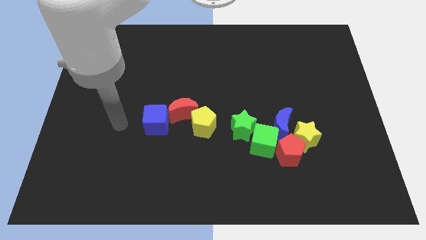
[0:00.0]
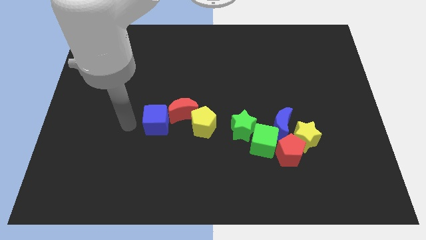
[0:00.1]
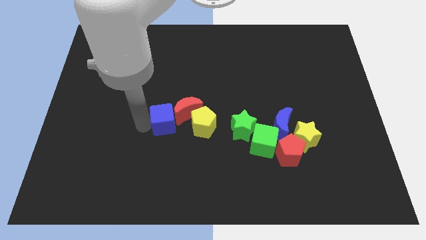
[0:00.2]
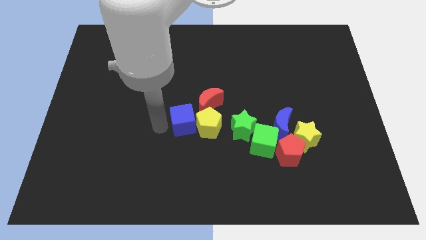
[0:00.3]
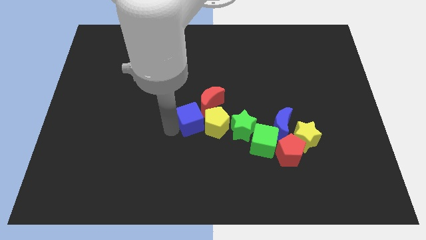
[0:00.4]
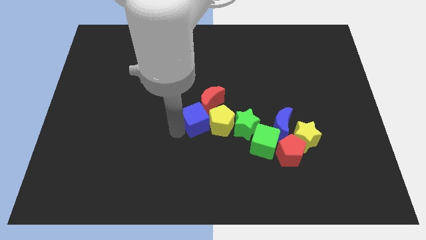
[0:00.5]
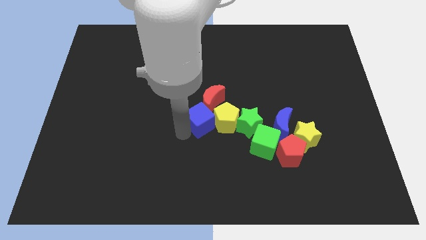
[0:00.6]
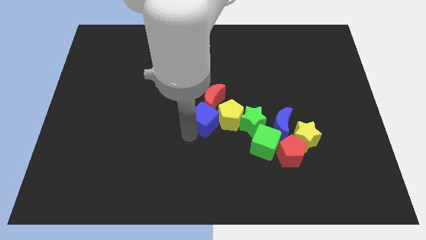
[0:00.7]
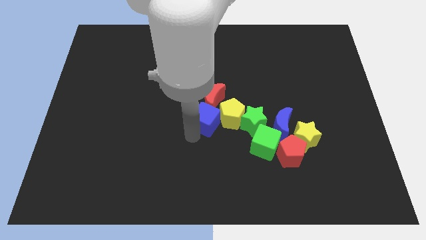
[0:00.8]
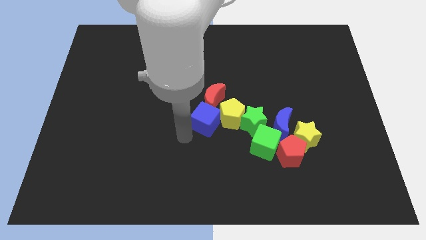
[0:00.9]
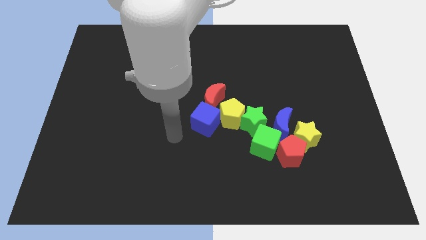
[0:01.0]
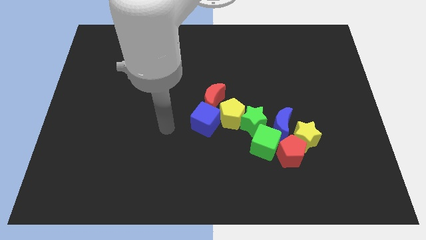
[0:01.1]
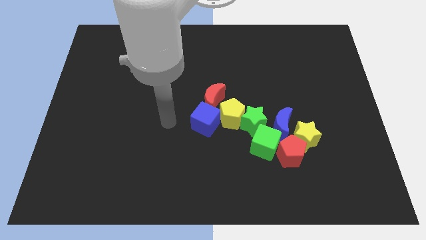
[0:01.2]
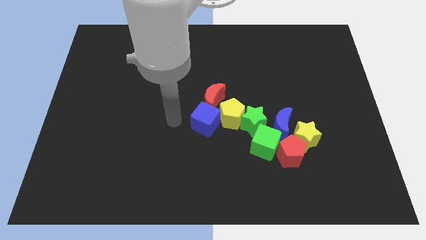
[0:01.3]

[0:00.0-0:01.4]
slide the blue cube into the yellow pentagon

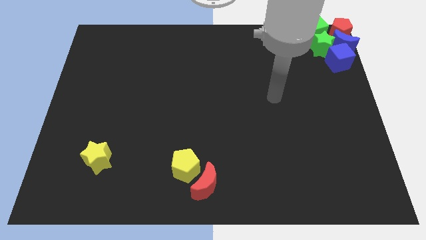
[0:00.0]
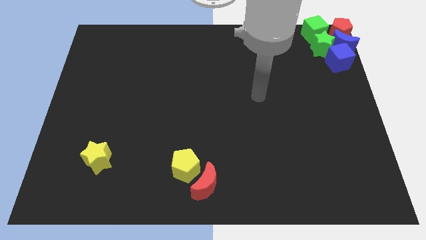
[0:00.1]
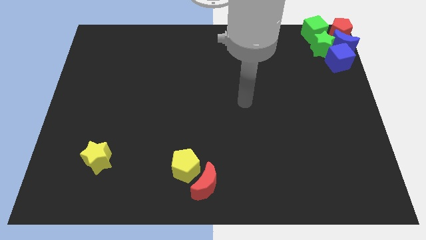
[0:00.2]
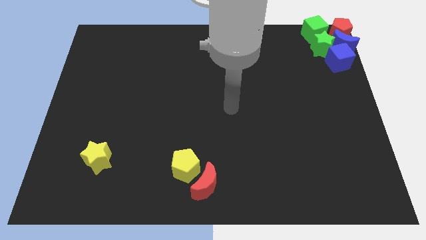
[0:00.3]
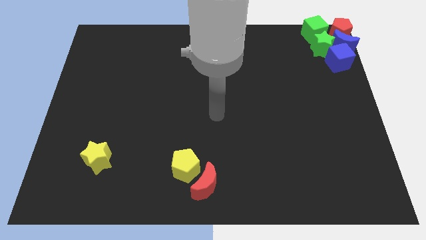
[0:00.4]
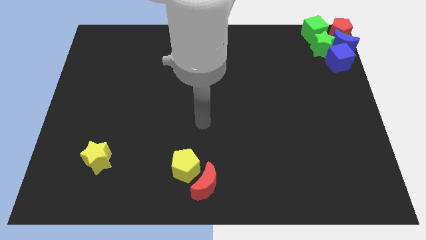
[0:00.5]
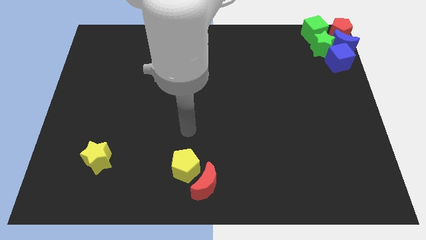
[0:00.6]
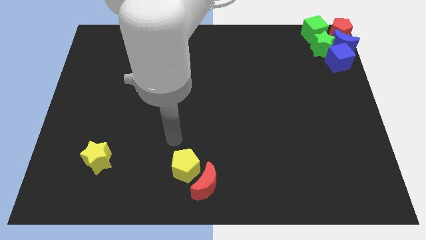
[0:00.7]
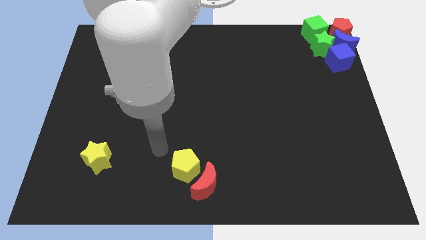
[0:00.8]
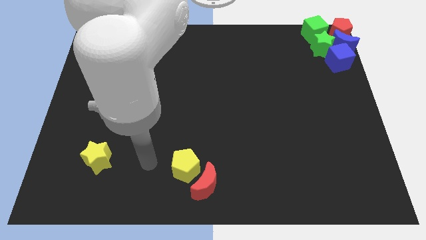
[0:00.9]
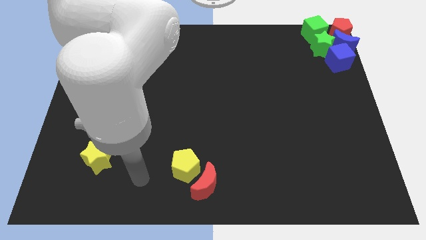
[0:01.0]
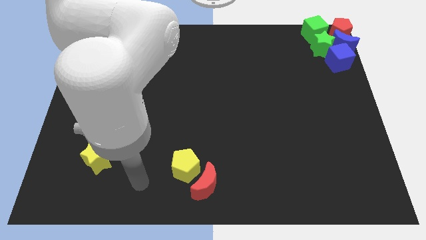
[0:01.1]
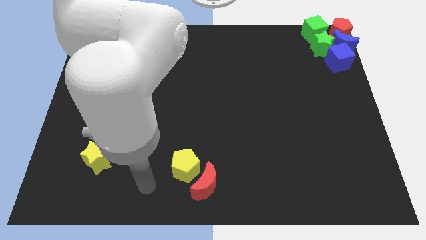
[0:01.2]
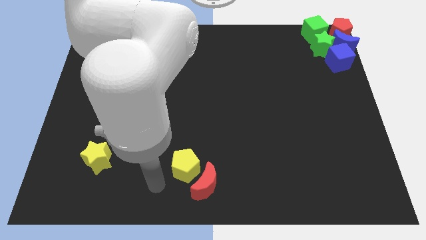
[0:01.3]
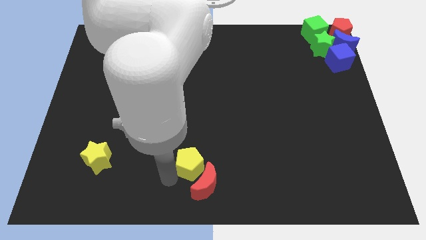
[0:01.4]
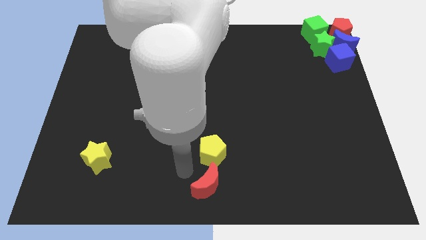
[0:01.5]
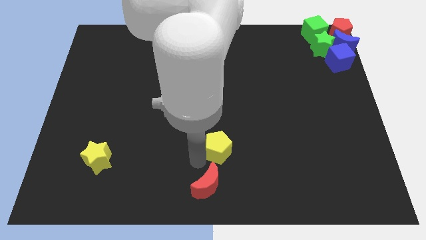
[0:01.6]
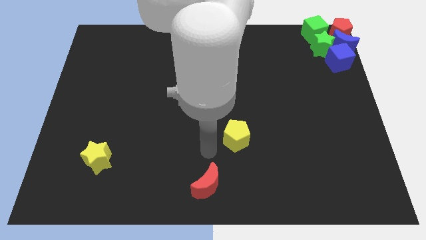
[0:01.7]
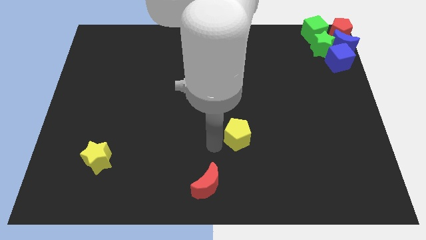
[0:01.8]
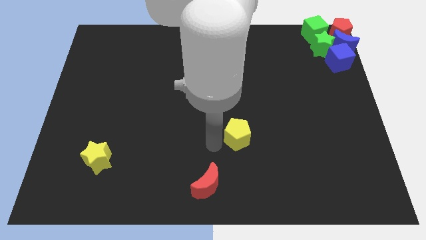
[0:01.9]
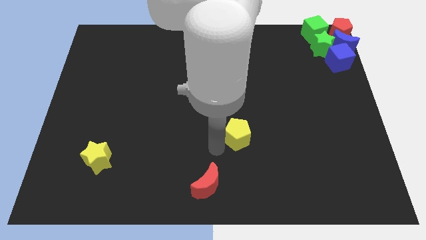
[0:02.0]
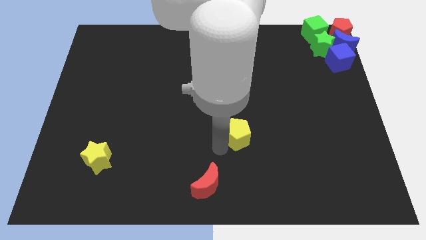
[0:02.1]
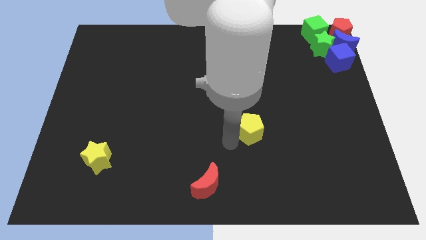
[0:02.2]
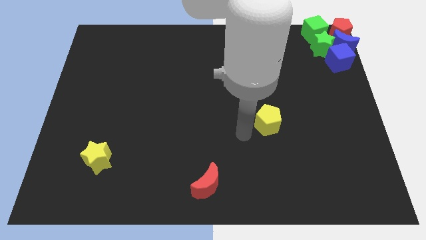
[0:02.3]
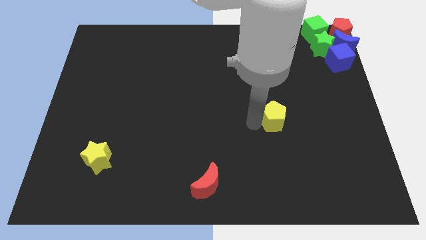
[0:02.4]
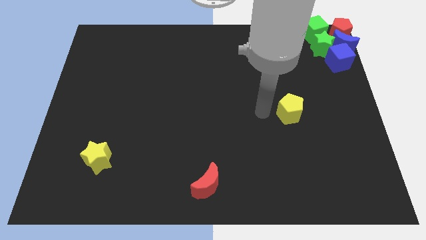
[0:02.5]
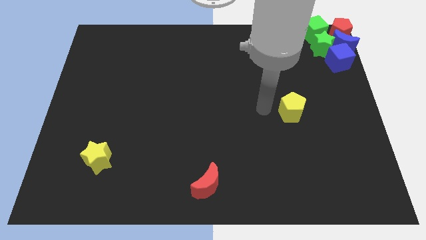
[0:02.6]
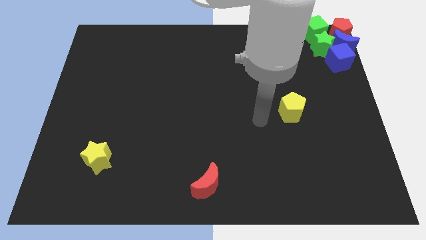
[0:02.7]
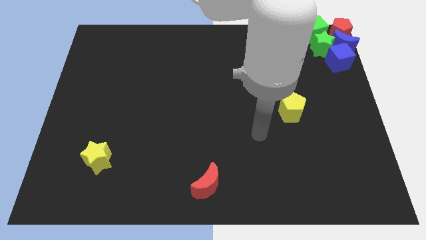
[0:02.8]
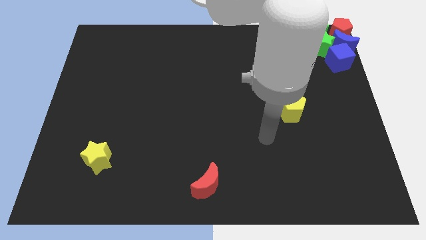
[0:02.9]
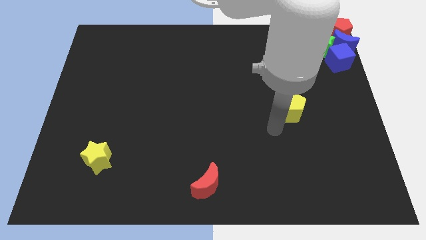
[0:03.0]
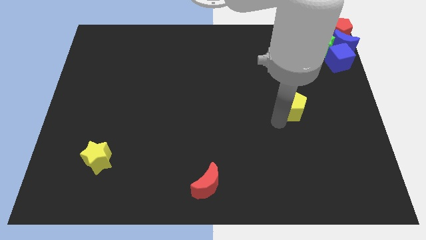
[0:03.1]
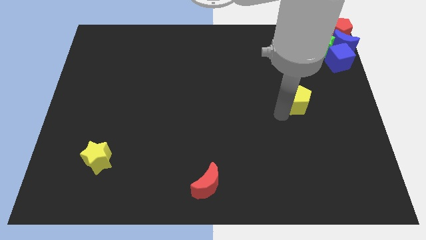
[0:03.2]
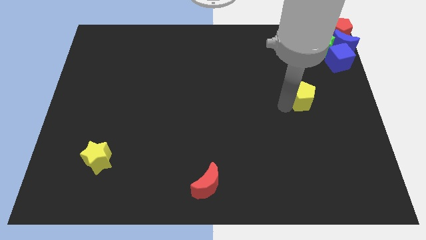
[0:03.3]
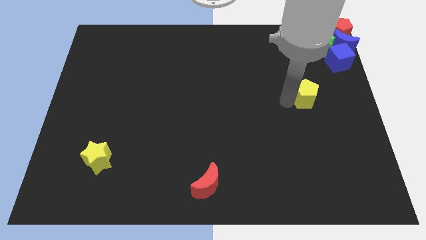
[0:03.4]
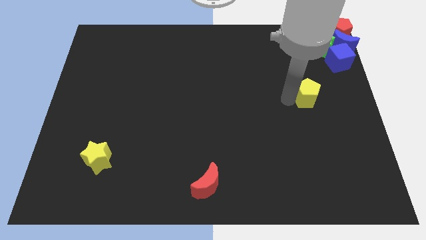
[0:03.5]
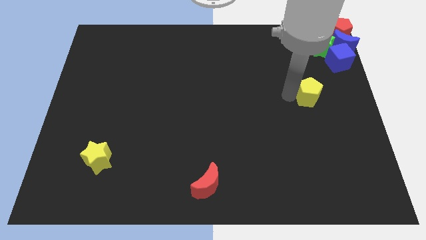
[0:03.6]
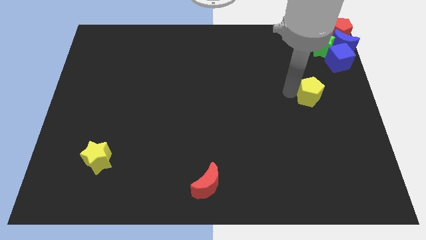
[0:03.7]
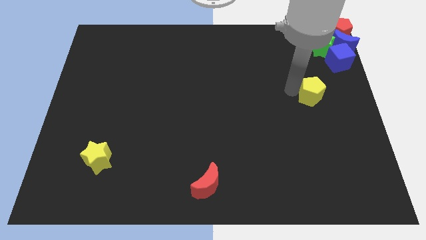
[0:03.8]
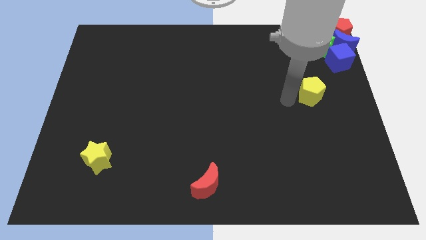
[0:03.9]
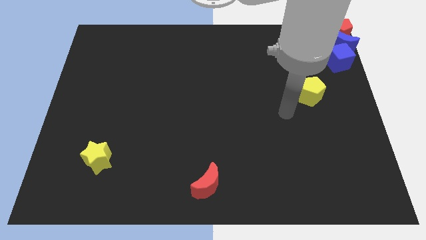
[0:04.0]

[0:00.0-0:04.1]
move the yellow pentagon towards the top right of the board

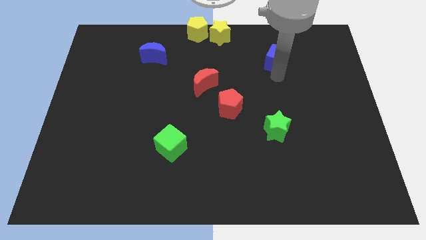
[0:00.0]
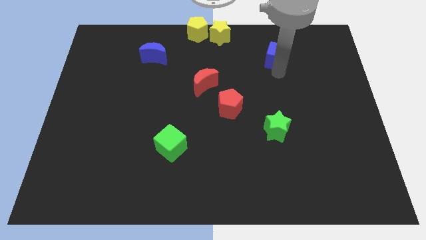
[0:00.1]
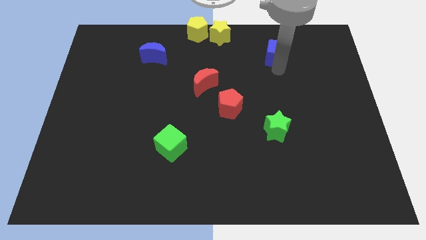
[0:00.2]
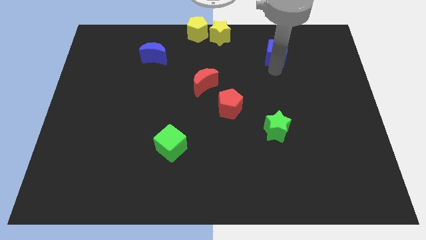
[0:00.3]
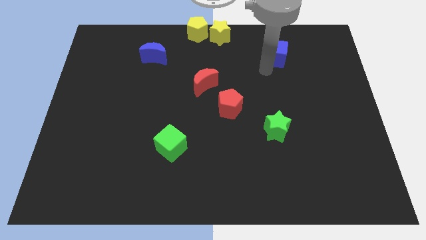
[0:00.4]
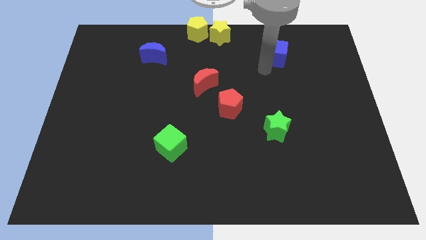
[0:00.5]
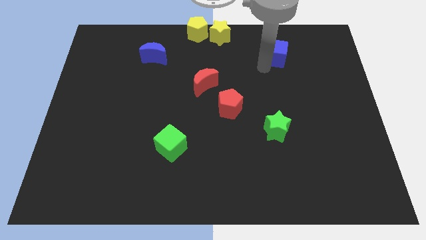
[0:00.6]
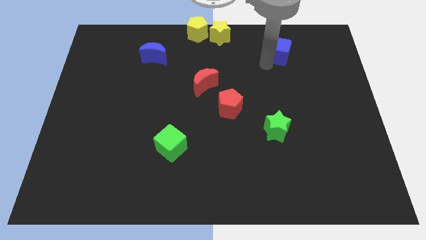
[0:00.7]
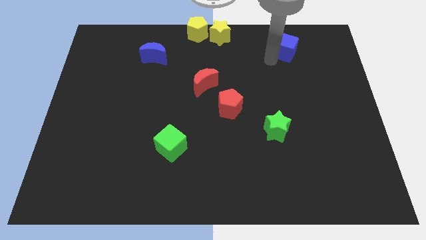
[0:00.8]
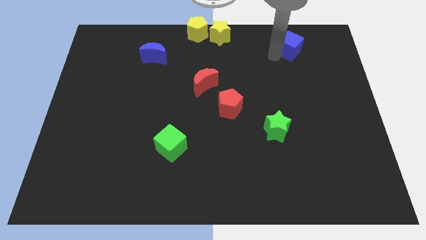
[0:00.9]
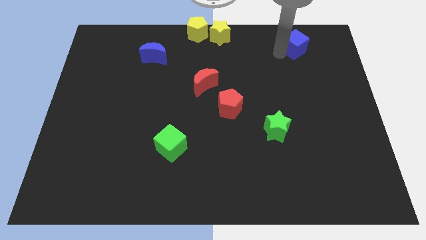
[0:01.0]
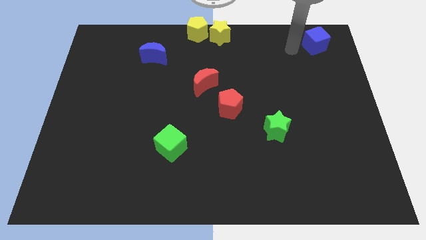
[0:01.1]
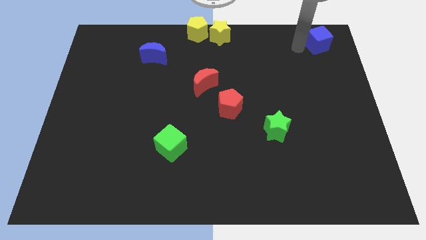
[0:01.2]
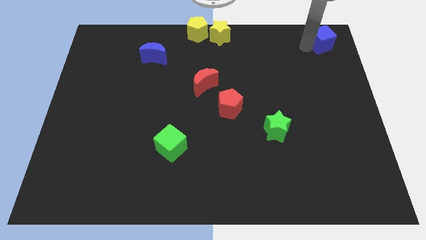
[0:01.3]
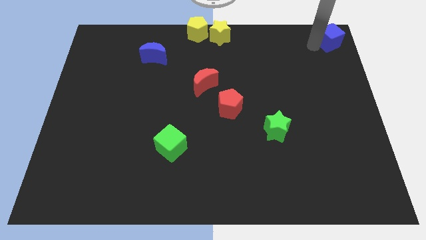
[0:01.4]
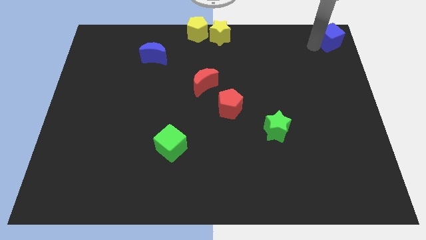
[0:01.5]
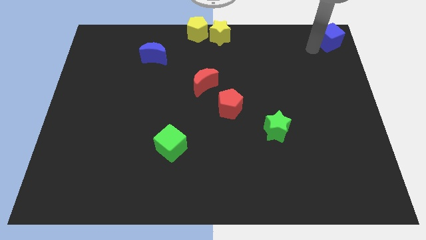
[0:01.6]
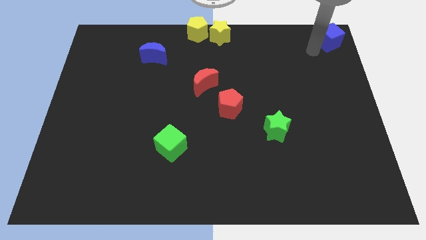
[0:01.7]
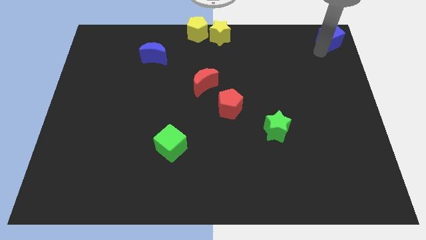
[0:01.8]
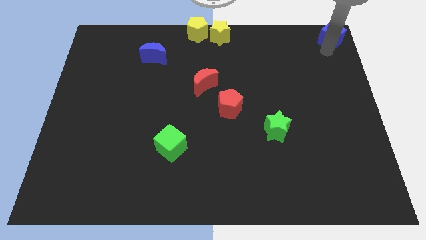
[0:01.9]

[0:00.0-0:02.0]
put the blue cube at the top right corner

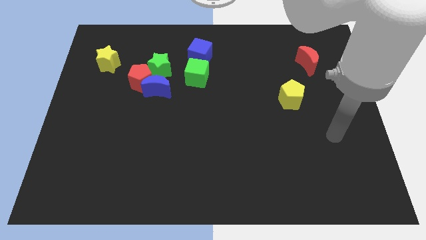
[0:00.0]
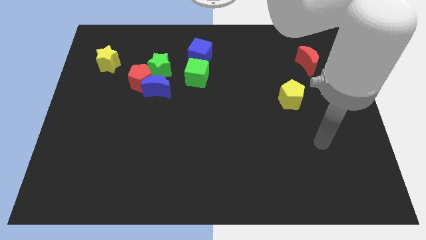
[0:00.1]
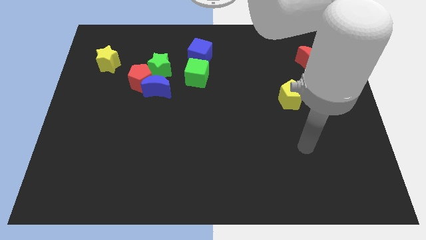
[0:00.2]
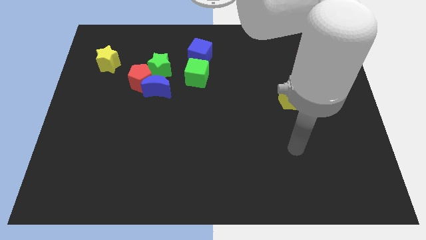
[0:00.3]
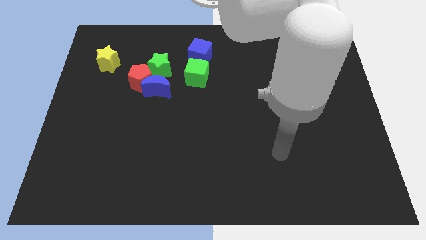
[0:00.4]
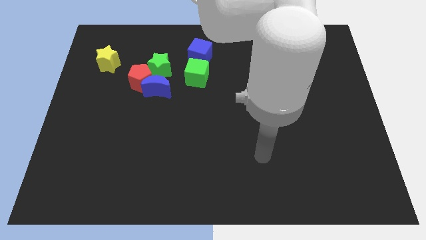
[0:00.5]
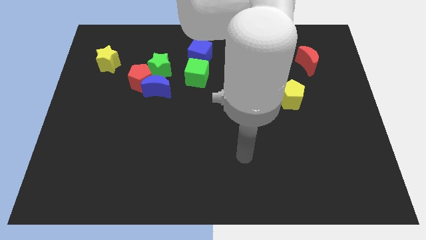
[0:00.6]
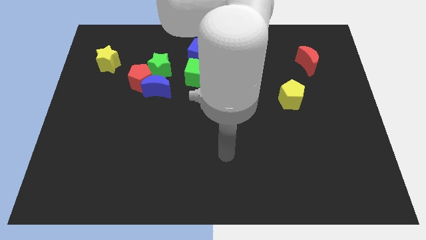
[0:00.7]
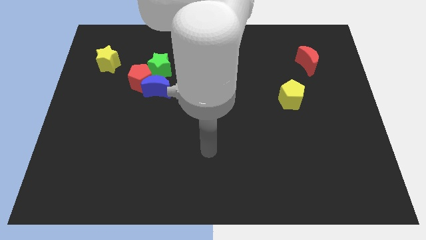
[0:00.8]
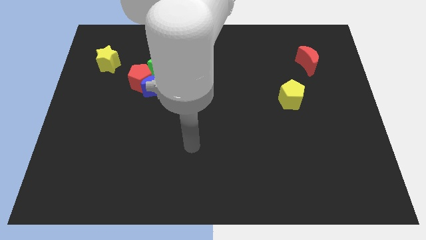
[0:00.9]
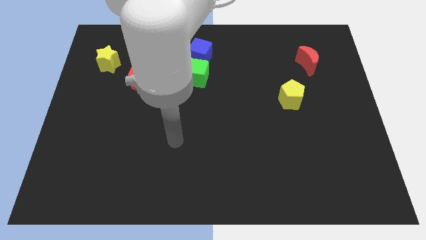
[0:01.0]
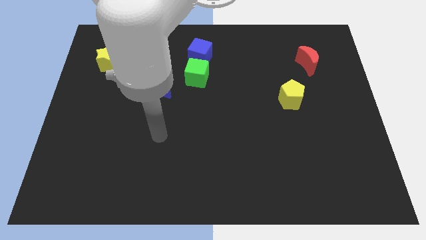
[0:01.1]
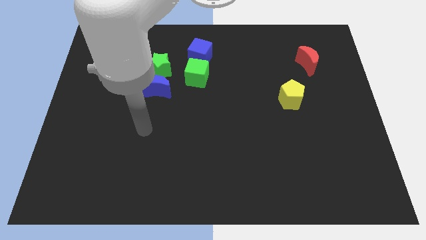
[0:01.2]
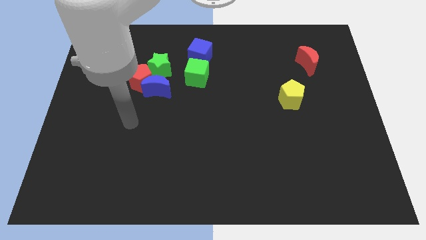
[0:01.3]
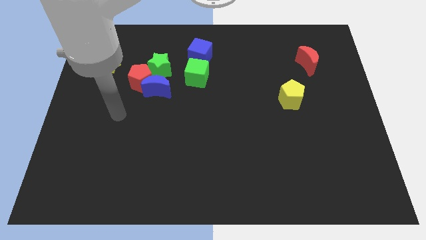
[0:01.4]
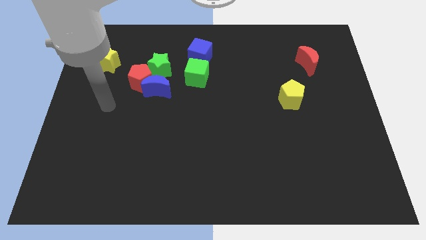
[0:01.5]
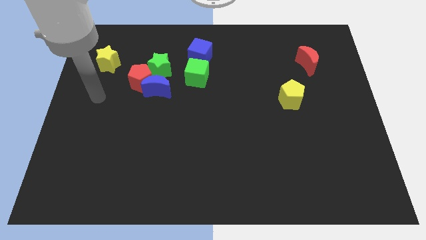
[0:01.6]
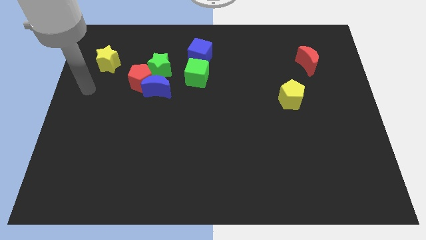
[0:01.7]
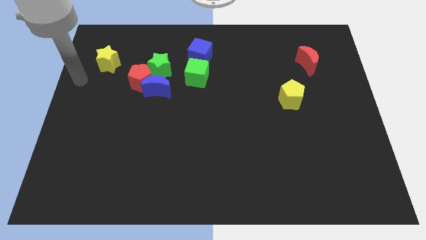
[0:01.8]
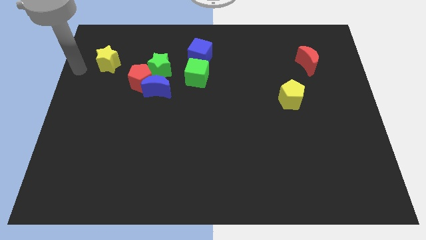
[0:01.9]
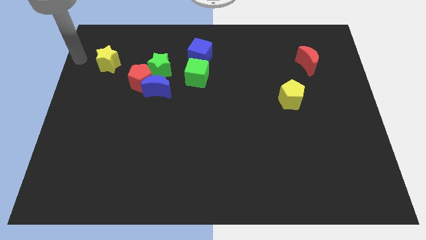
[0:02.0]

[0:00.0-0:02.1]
move your arm to the left side of the yellow star
